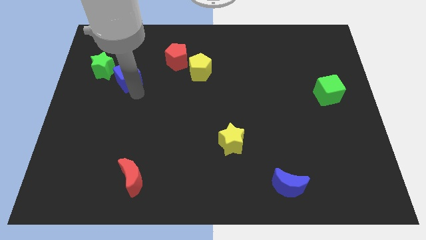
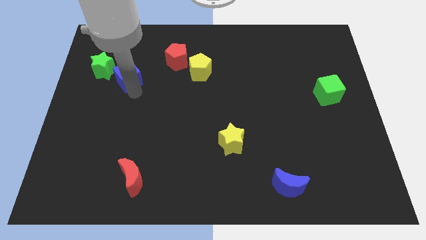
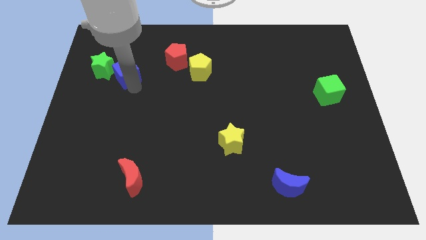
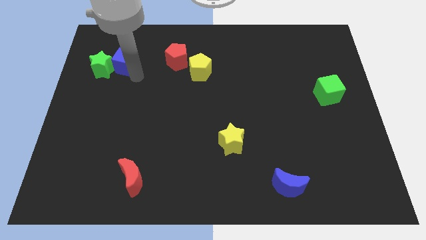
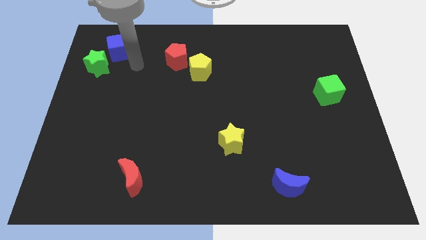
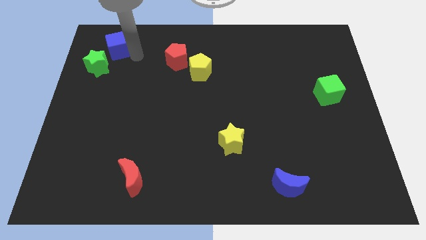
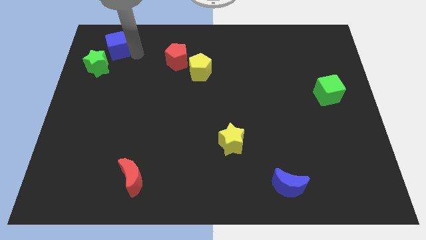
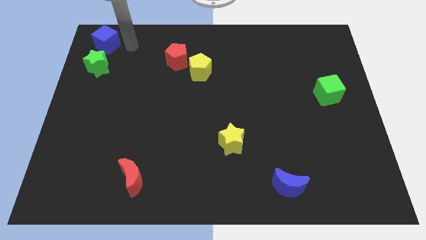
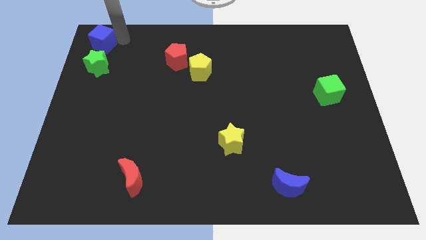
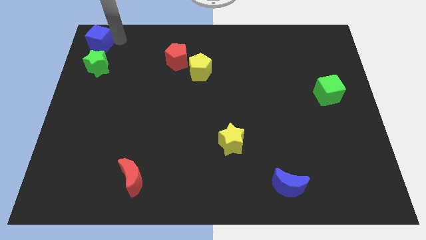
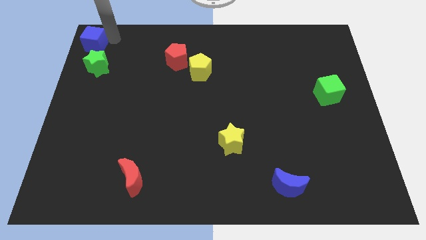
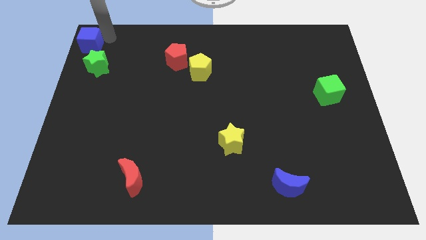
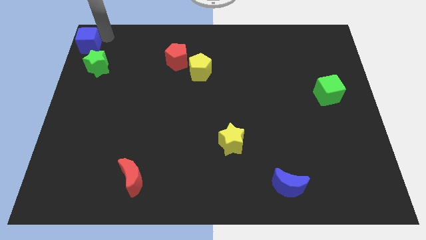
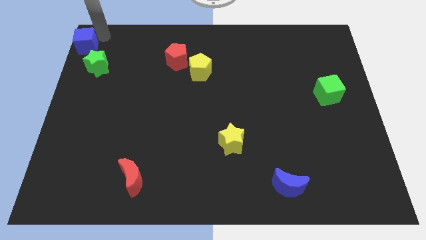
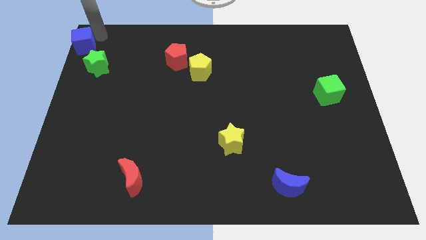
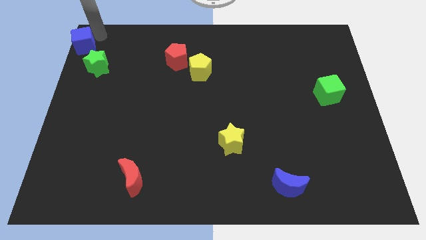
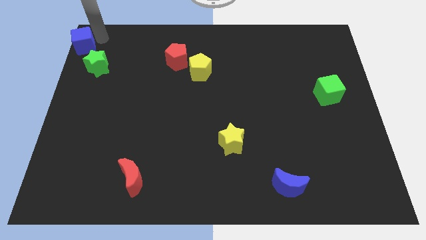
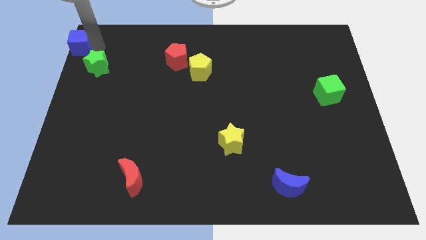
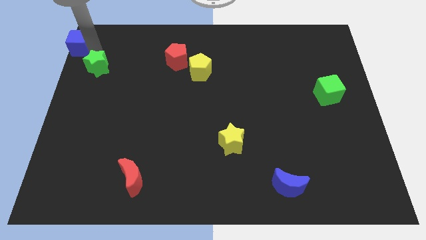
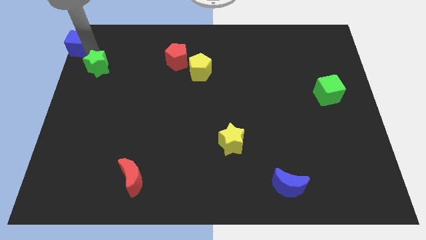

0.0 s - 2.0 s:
place blue cube to the top left the of green star

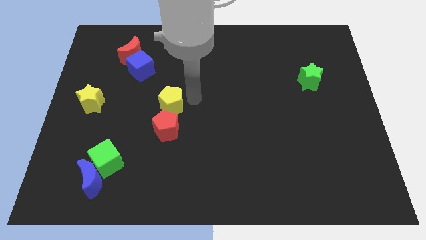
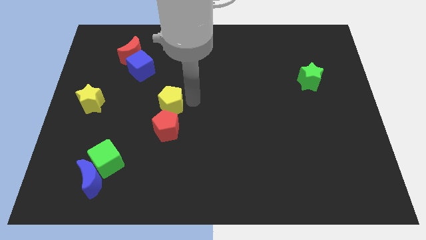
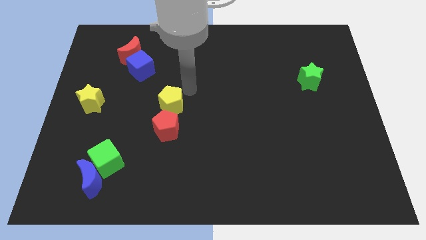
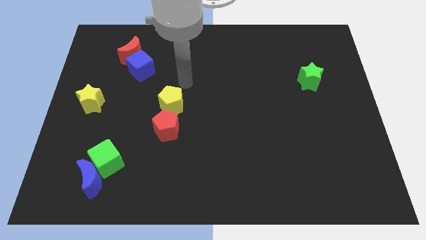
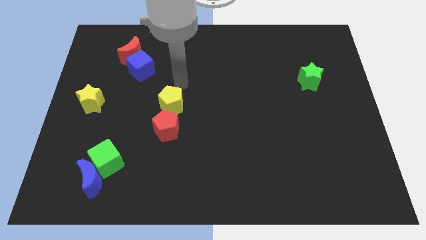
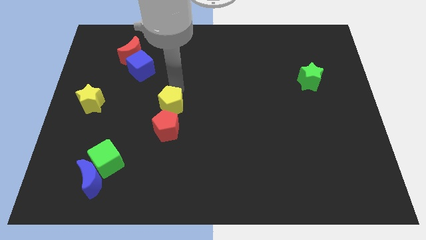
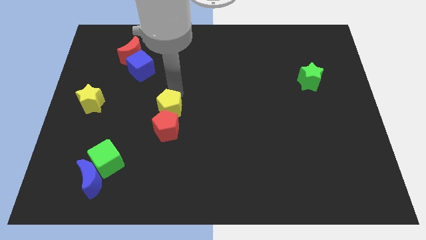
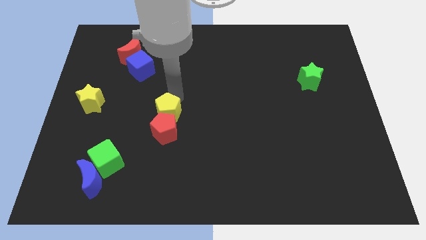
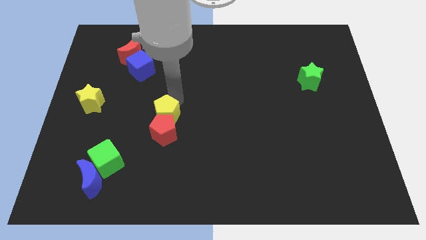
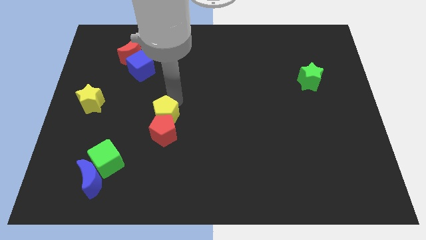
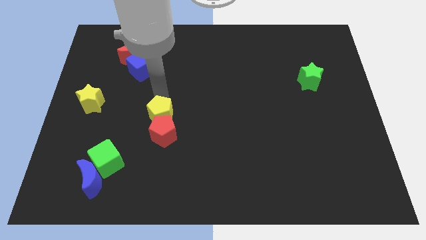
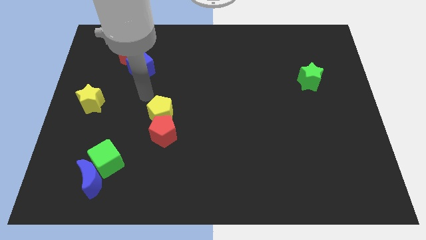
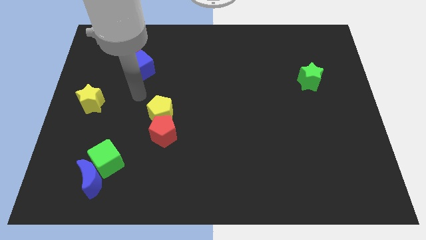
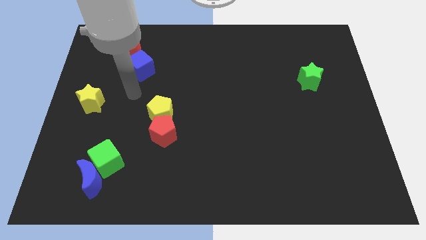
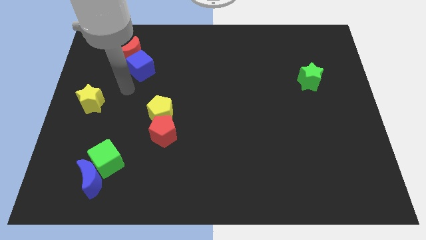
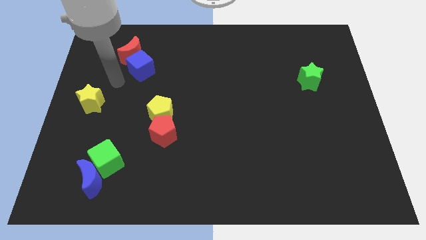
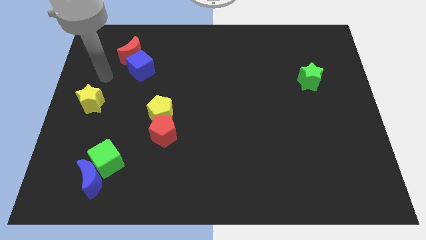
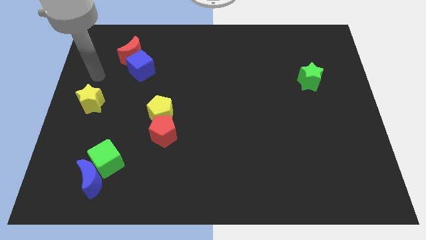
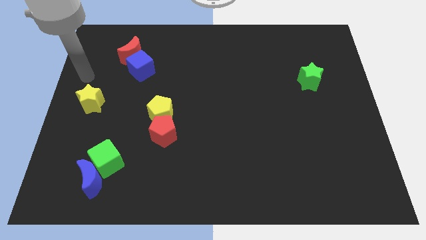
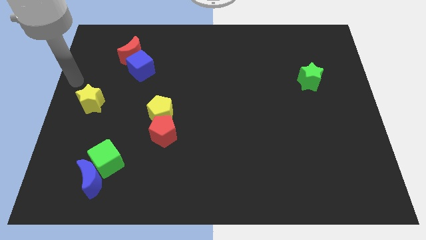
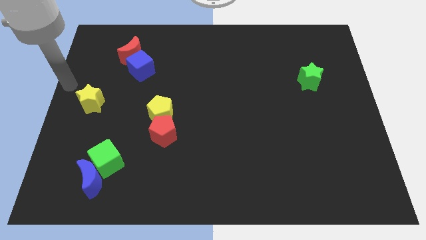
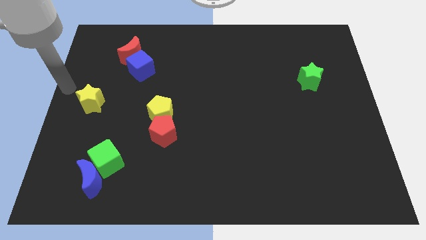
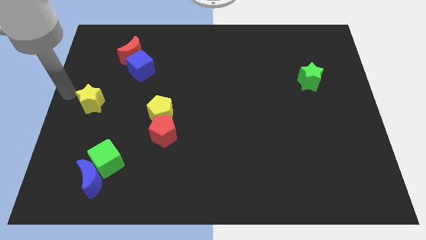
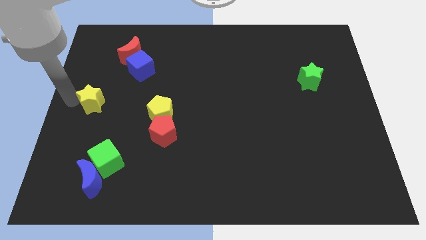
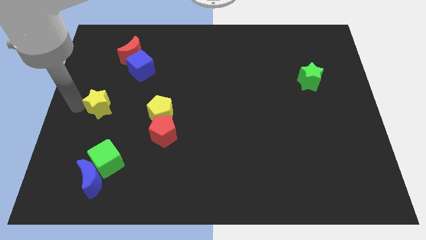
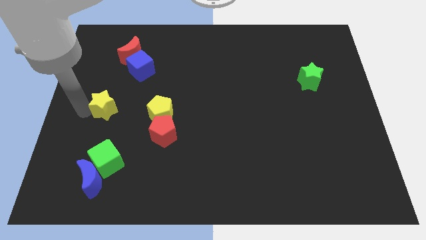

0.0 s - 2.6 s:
push the yellow pentagon into the red pentagon towards the bottom left of the board

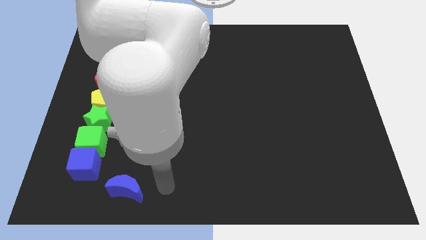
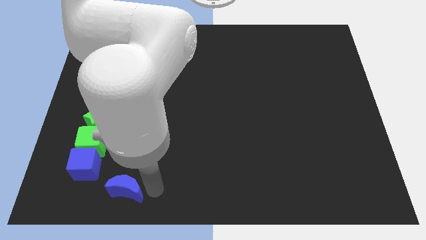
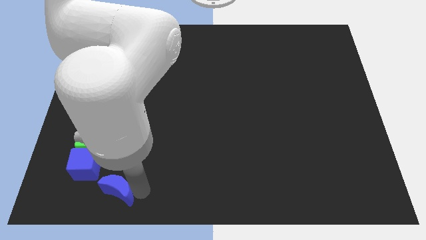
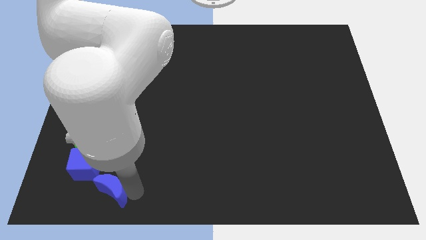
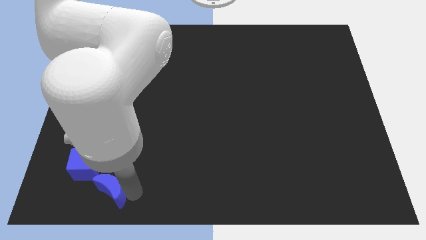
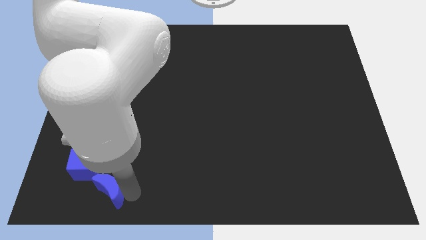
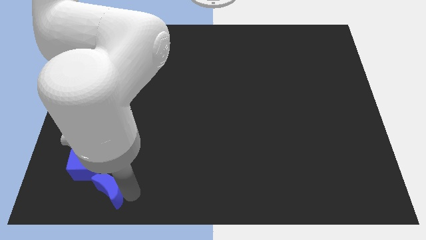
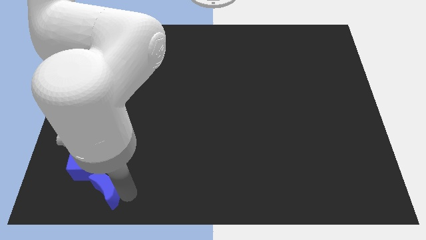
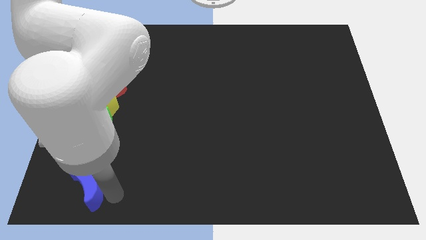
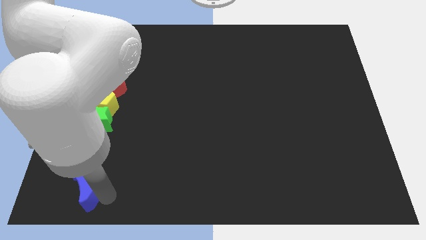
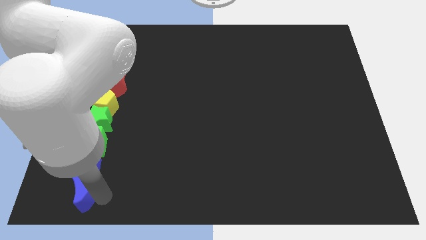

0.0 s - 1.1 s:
put the blue crescent underneath the blue cube

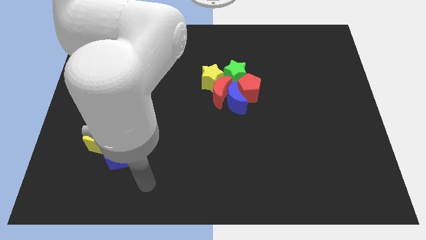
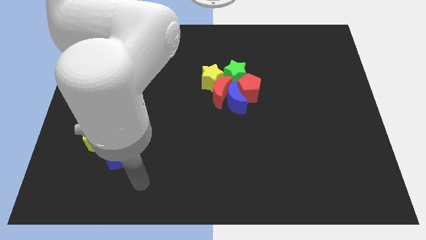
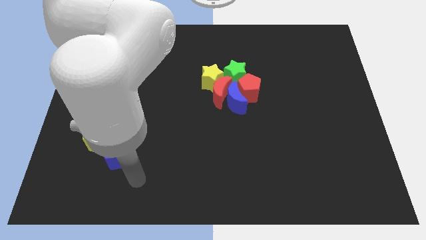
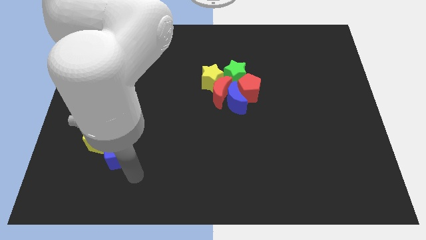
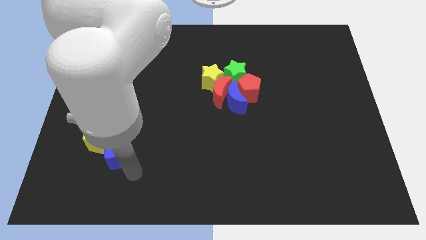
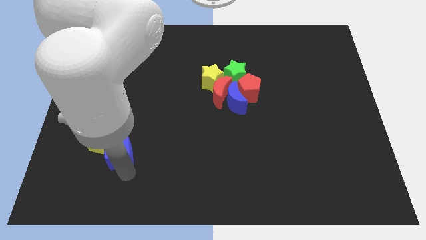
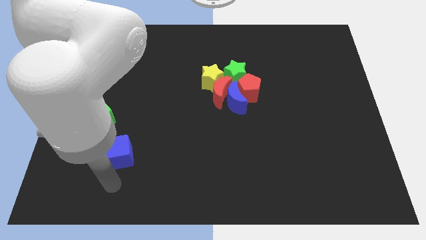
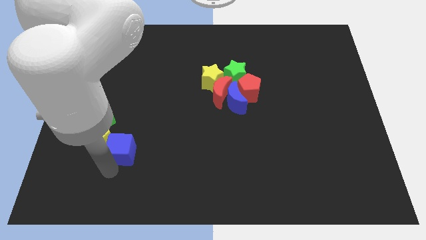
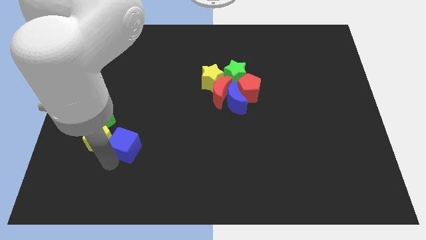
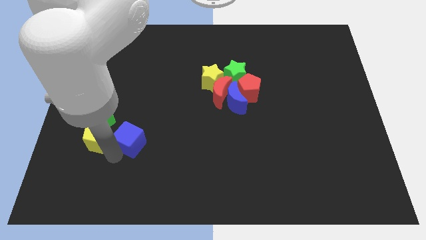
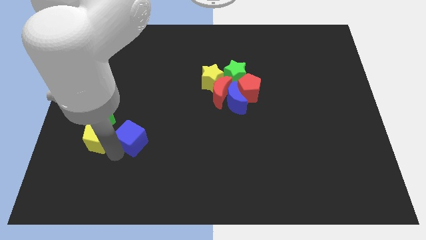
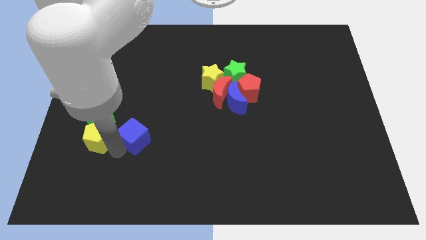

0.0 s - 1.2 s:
move the blue cube right to the yellow pentagon

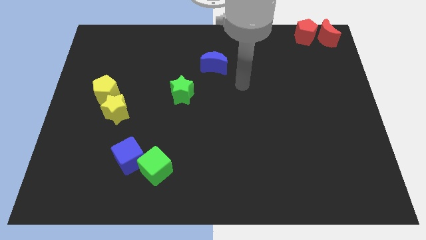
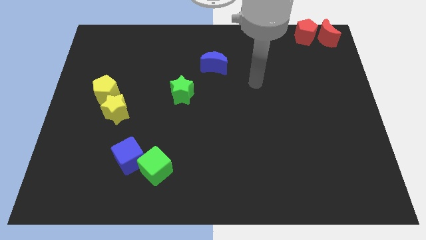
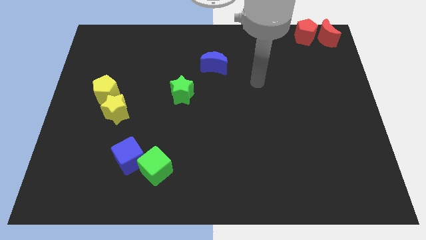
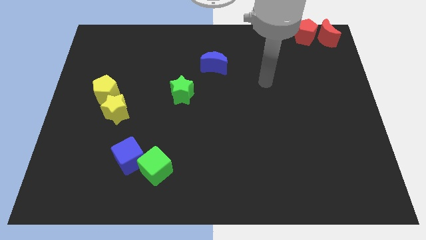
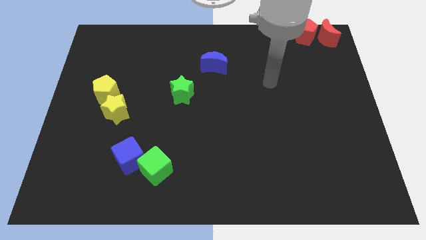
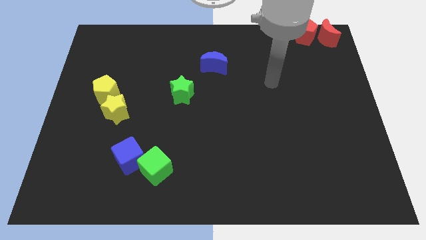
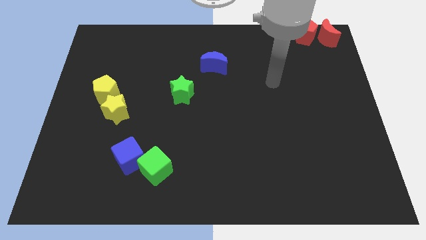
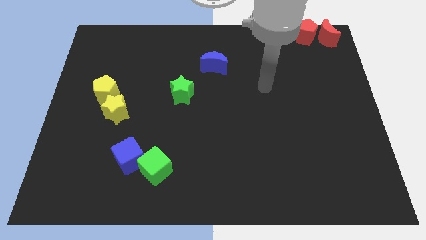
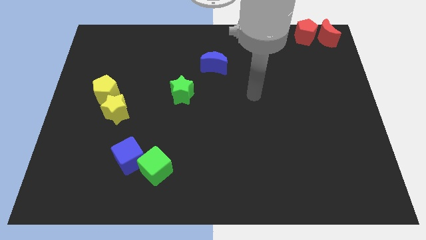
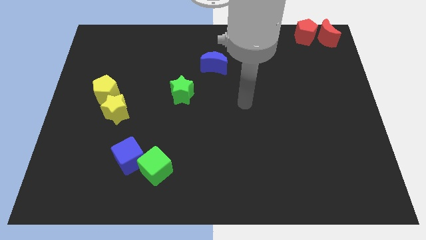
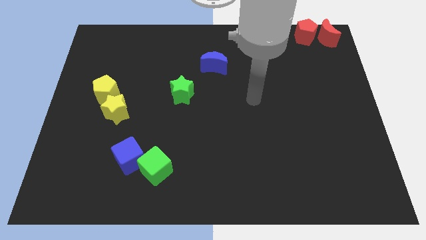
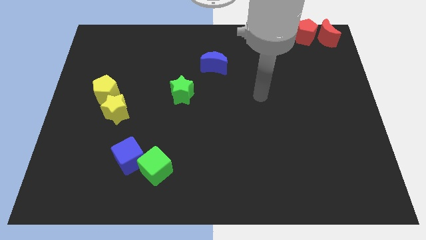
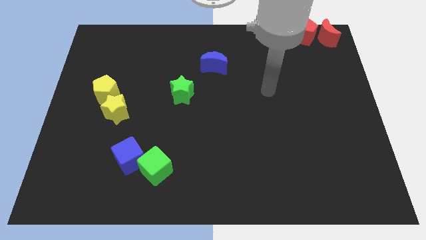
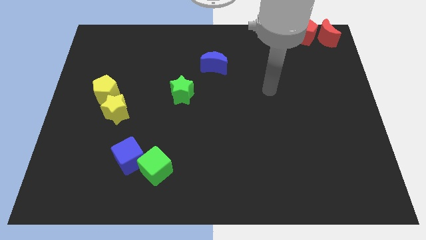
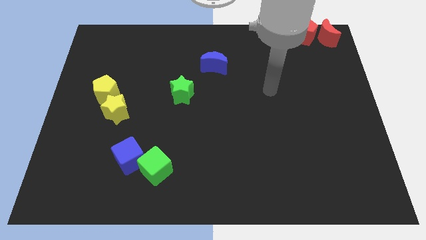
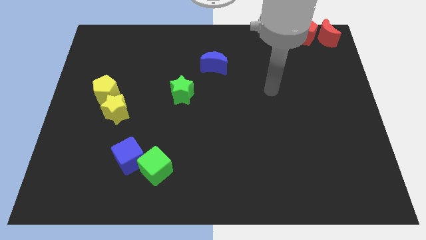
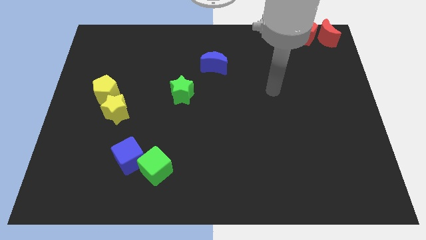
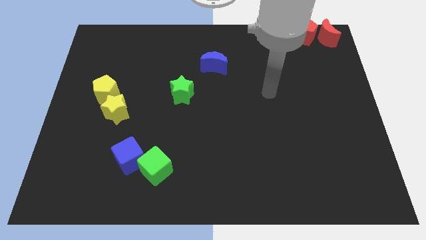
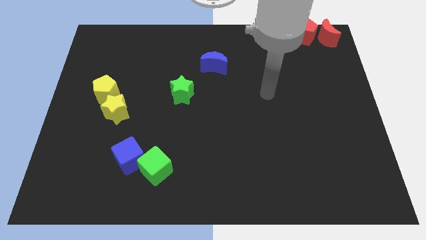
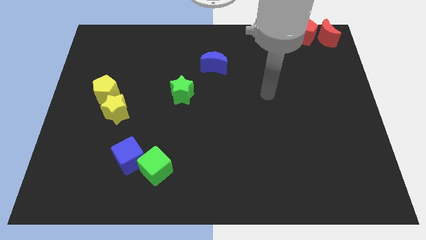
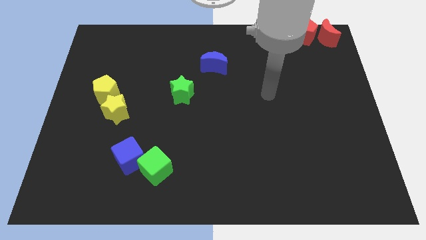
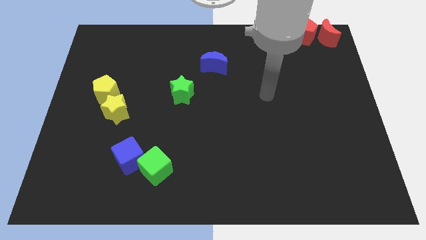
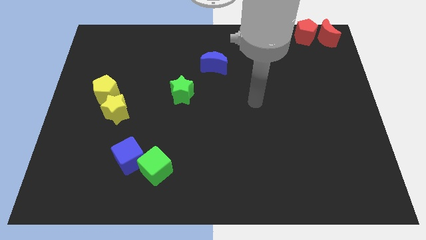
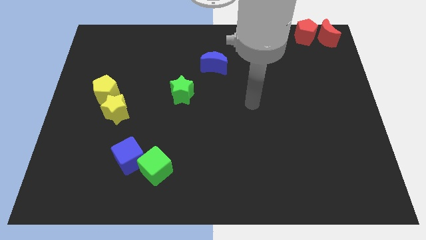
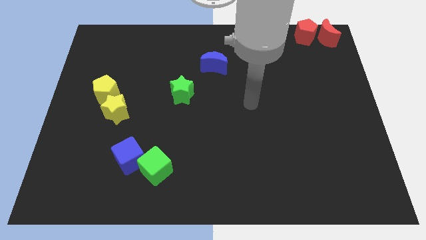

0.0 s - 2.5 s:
move your arm round a bit
